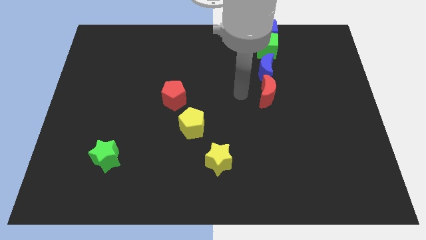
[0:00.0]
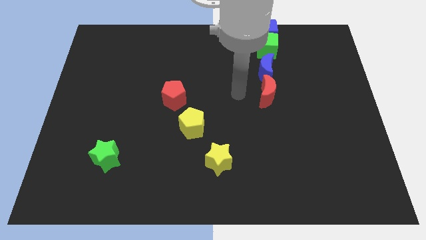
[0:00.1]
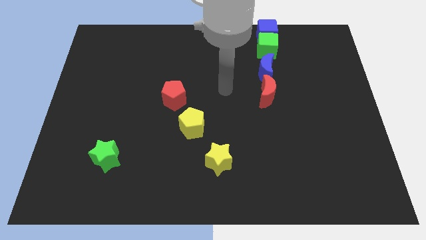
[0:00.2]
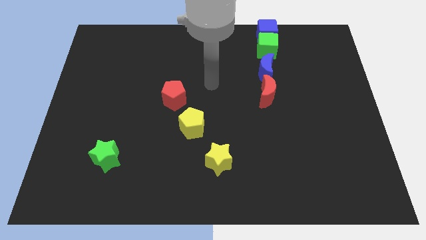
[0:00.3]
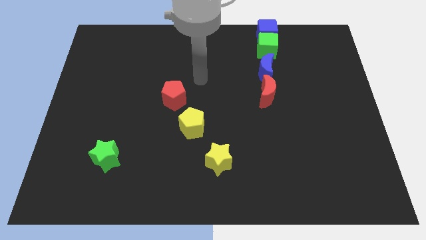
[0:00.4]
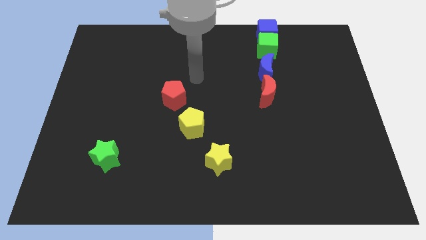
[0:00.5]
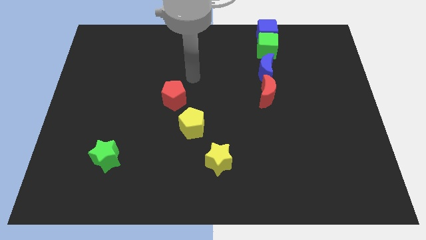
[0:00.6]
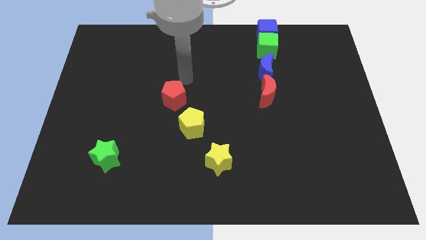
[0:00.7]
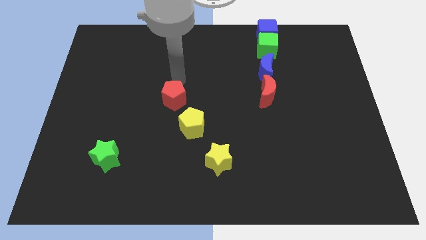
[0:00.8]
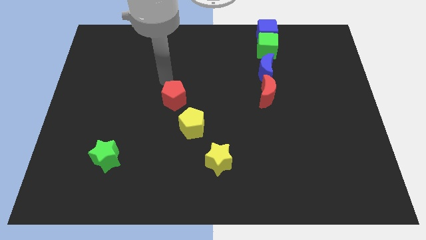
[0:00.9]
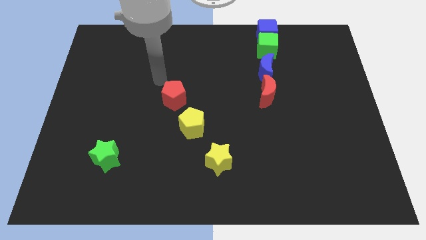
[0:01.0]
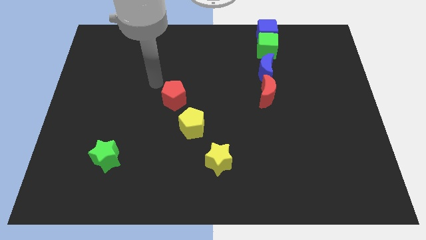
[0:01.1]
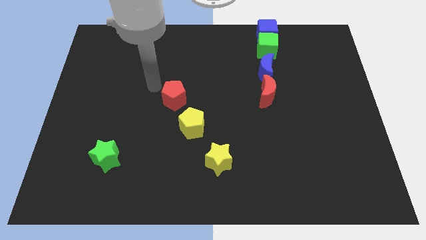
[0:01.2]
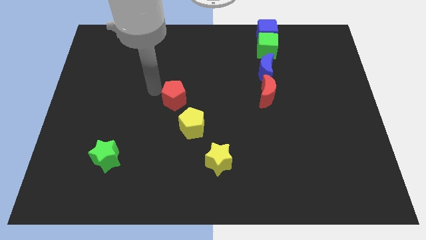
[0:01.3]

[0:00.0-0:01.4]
point the arm to the left of the red pentagon

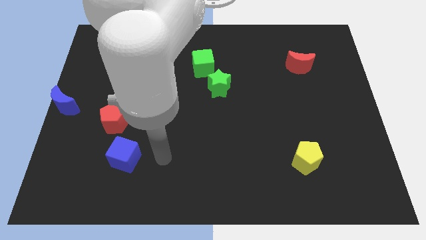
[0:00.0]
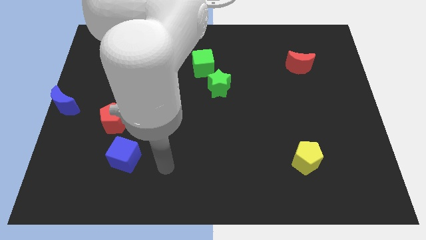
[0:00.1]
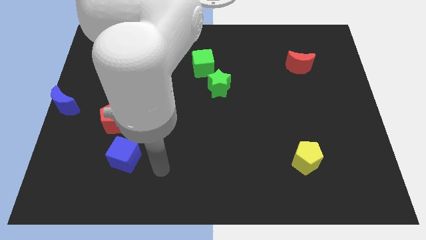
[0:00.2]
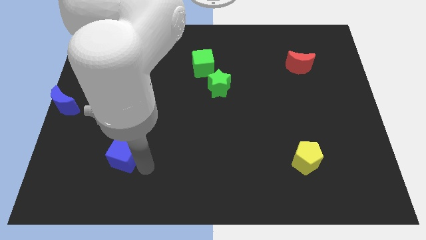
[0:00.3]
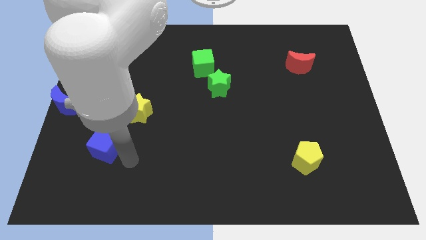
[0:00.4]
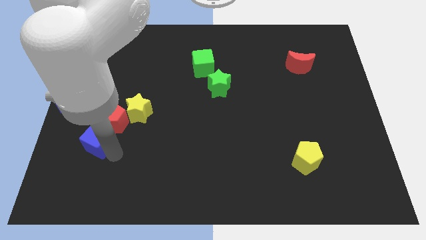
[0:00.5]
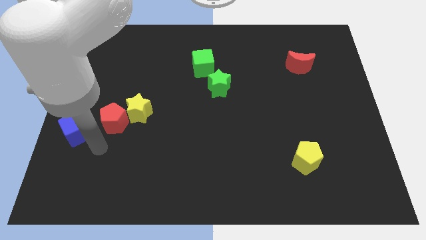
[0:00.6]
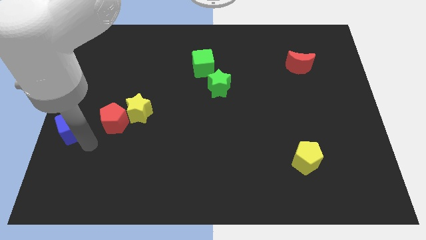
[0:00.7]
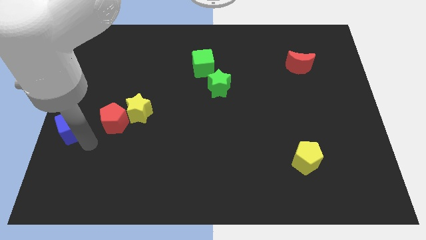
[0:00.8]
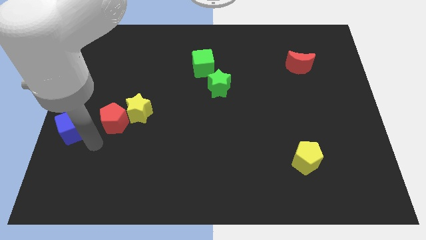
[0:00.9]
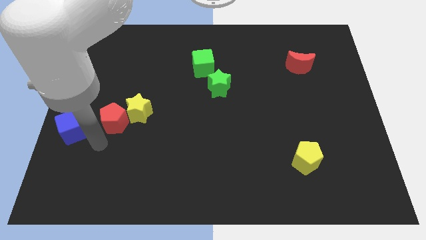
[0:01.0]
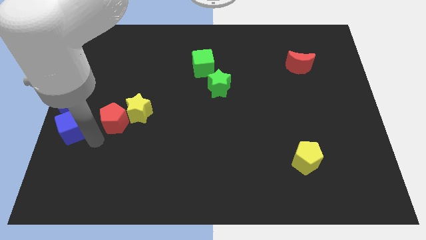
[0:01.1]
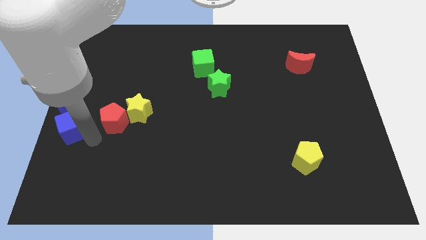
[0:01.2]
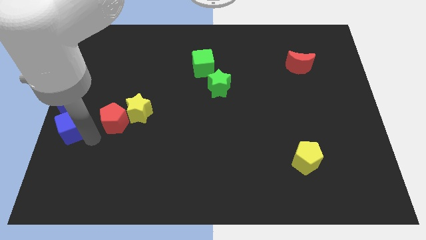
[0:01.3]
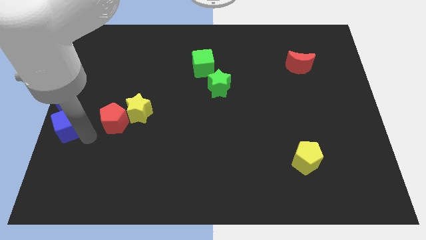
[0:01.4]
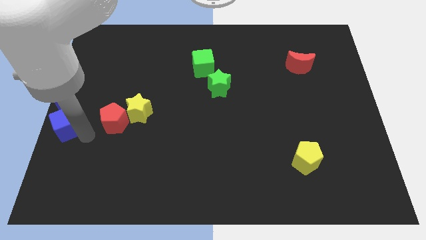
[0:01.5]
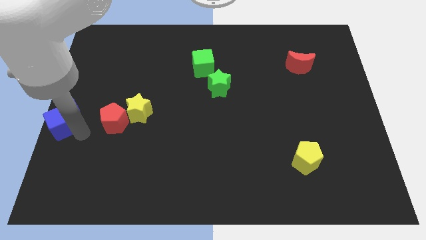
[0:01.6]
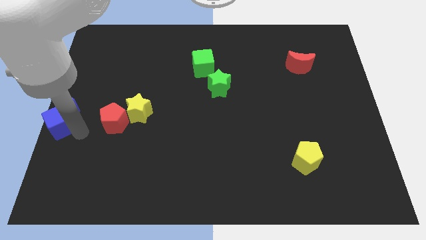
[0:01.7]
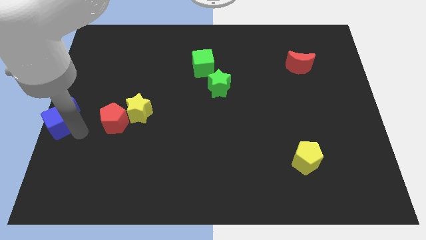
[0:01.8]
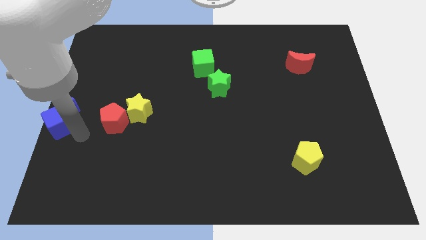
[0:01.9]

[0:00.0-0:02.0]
push the blue cube below to the blue moon

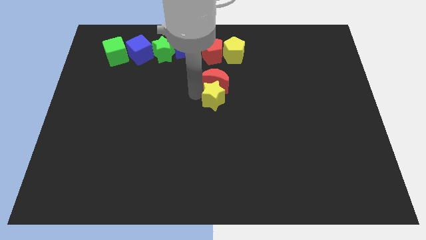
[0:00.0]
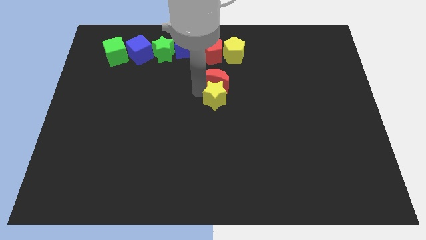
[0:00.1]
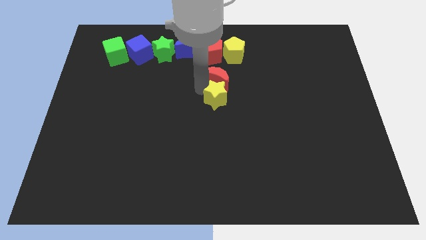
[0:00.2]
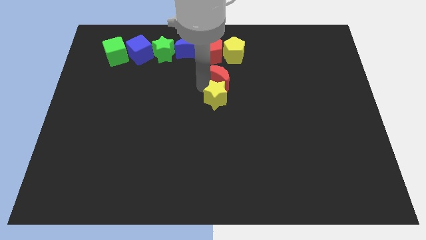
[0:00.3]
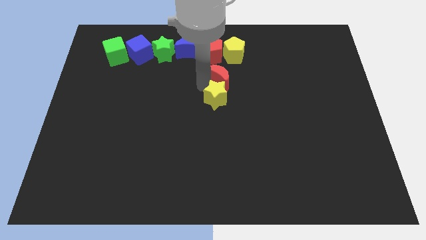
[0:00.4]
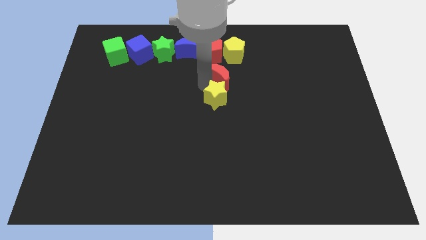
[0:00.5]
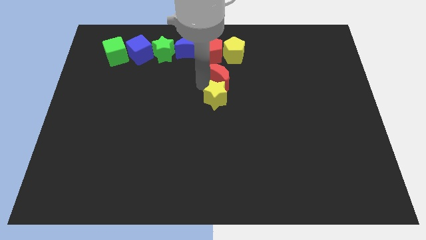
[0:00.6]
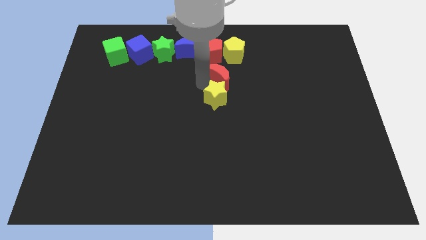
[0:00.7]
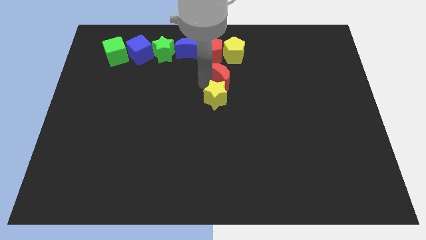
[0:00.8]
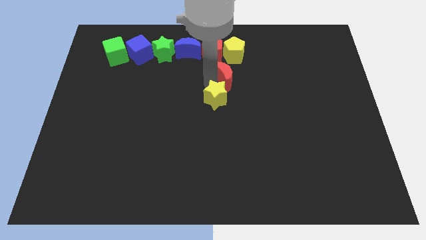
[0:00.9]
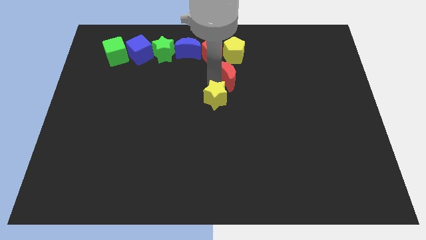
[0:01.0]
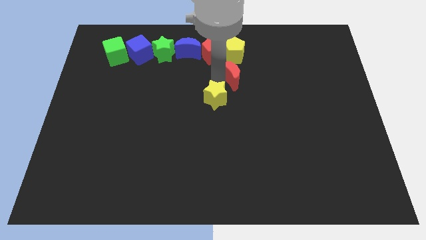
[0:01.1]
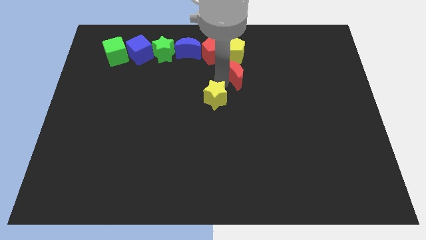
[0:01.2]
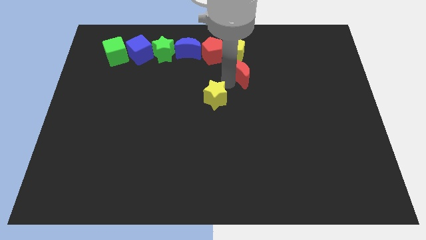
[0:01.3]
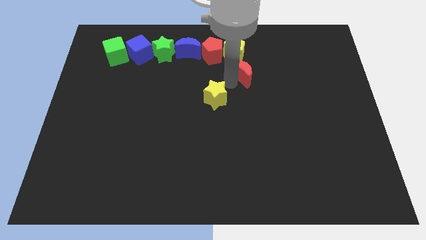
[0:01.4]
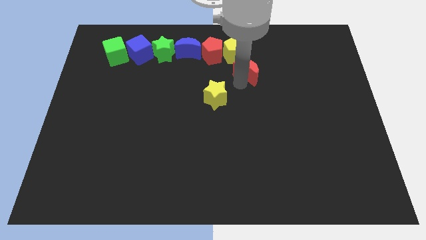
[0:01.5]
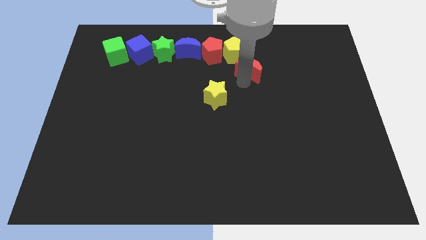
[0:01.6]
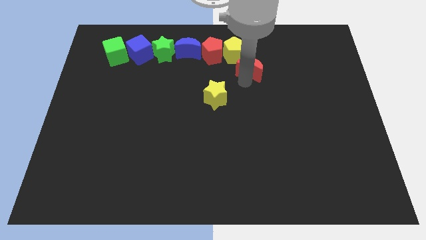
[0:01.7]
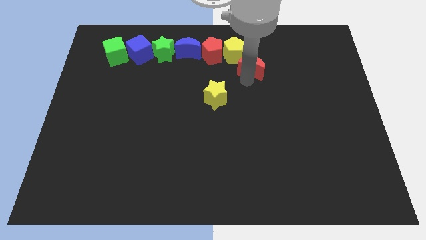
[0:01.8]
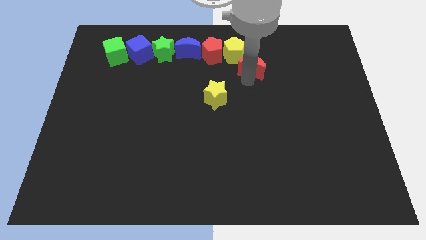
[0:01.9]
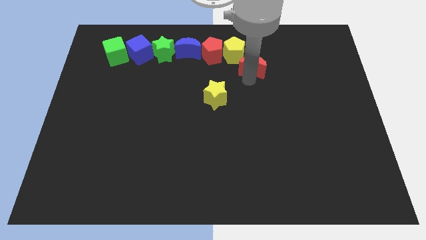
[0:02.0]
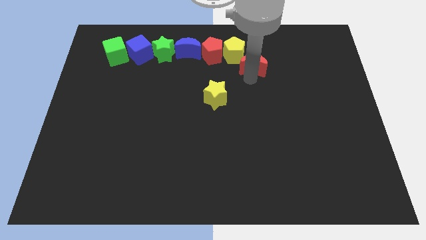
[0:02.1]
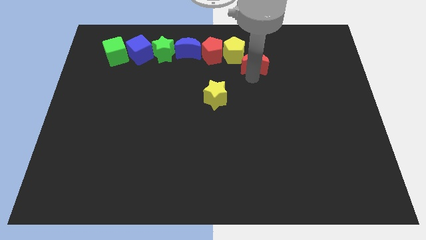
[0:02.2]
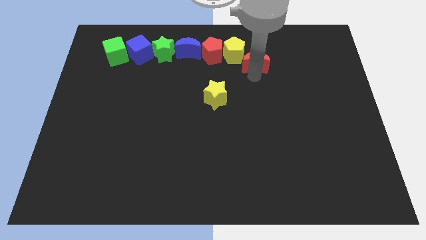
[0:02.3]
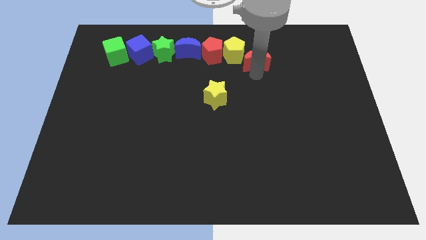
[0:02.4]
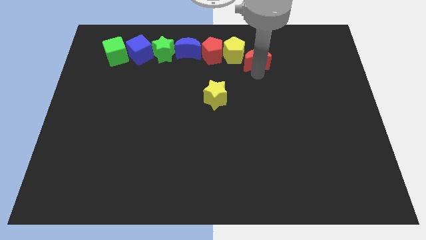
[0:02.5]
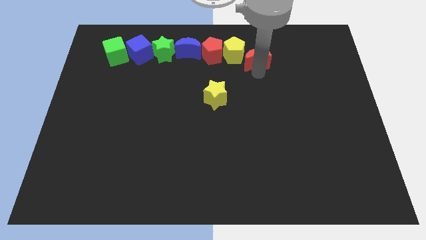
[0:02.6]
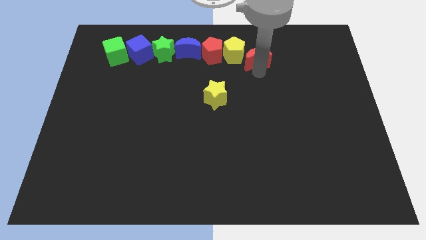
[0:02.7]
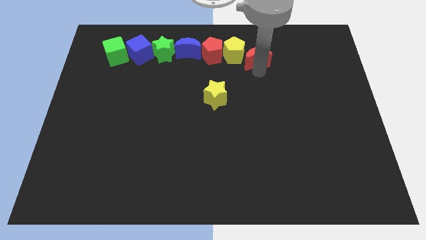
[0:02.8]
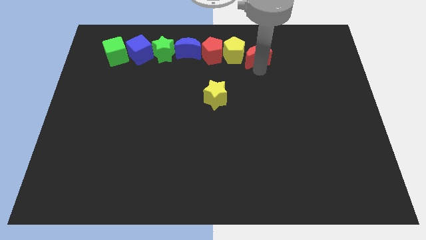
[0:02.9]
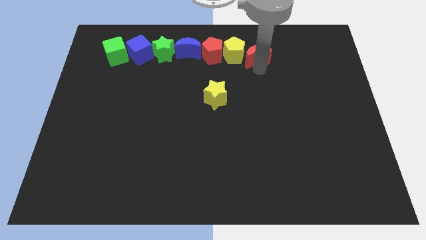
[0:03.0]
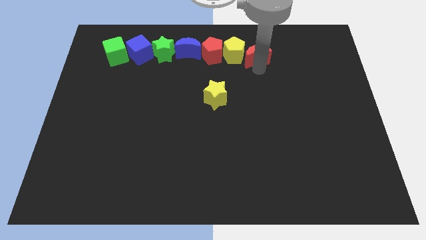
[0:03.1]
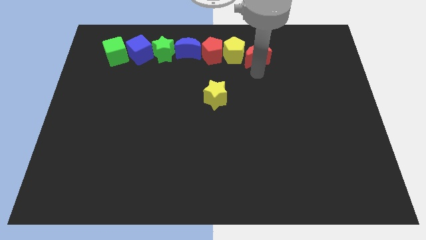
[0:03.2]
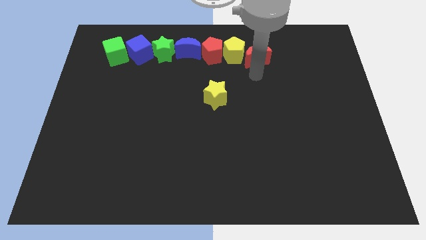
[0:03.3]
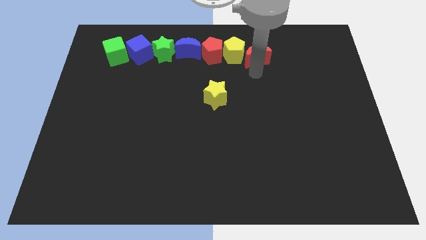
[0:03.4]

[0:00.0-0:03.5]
place red moon to the right of yellow pentagon

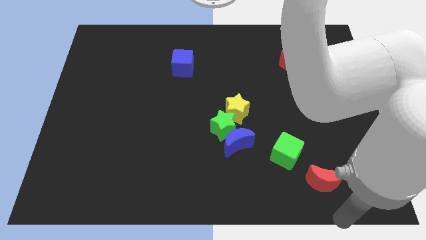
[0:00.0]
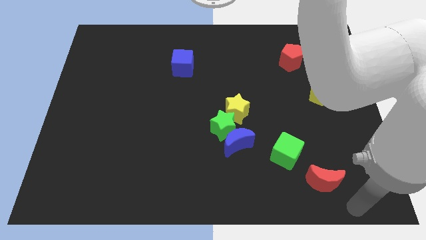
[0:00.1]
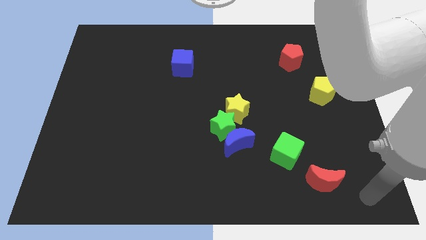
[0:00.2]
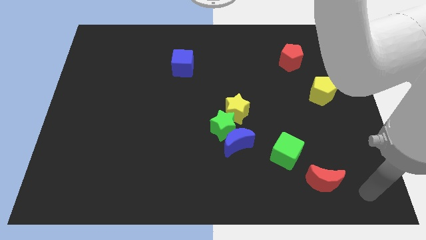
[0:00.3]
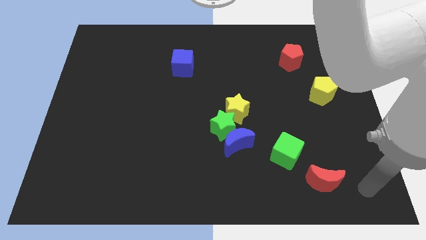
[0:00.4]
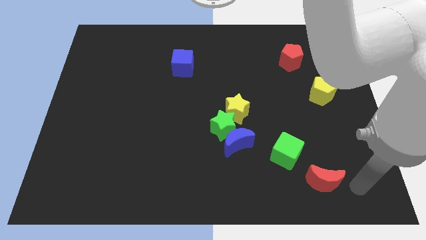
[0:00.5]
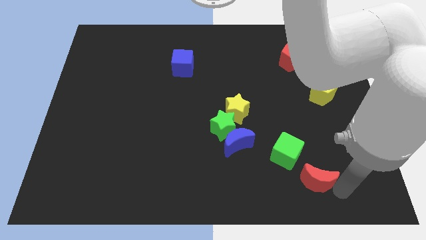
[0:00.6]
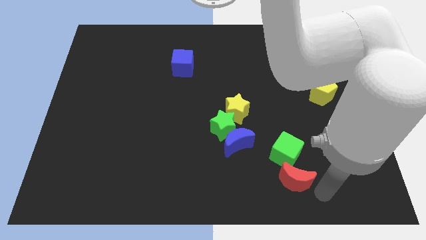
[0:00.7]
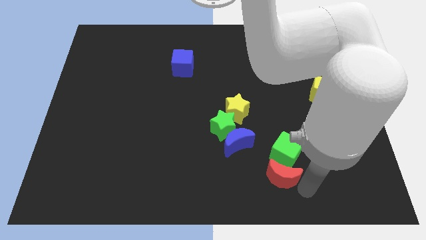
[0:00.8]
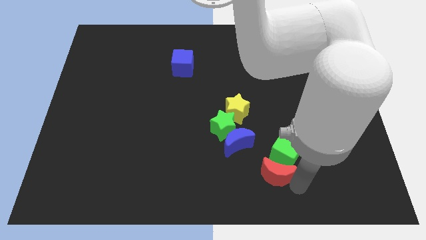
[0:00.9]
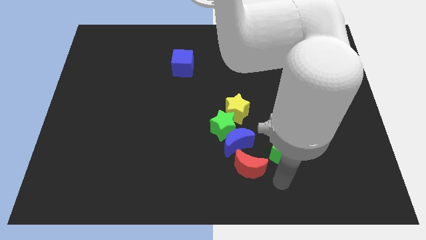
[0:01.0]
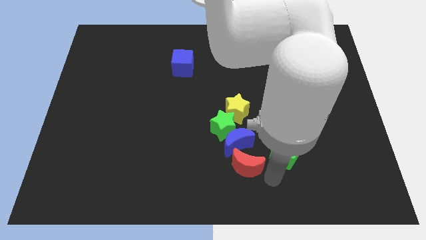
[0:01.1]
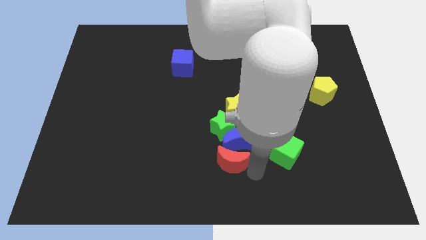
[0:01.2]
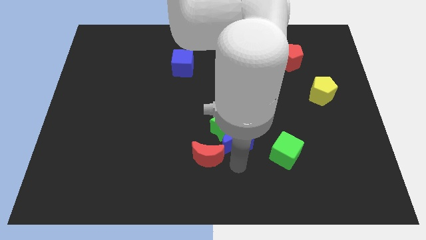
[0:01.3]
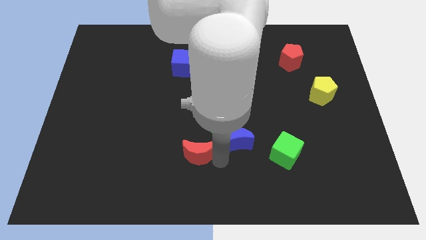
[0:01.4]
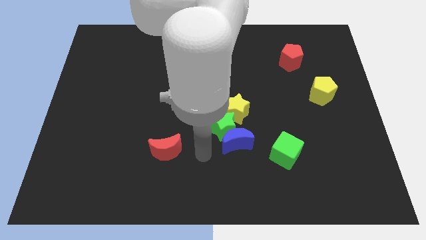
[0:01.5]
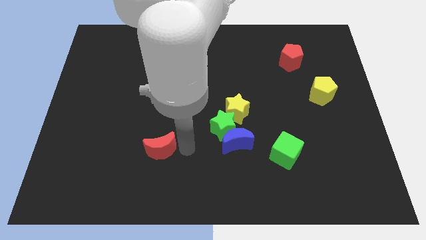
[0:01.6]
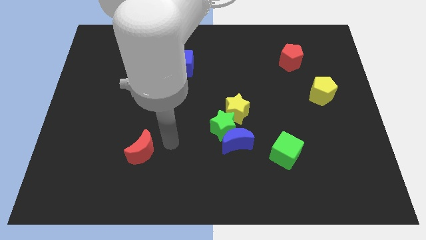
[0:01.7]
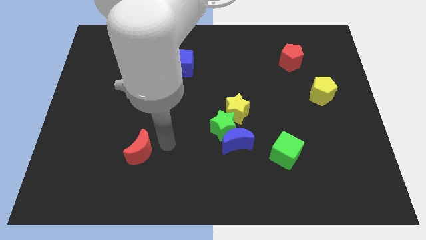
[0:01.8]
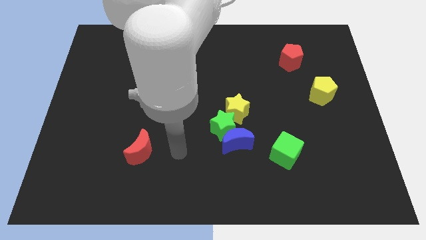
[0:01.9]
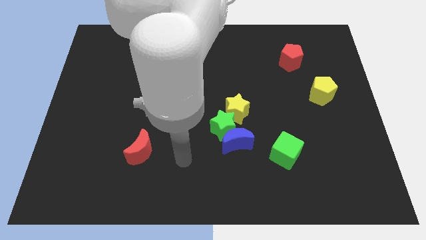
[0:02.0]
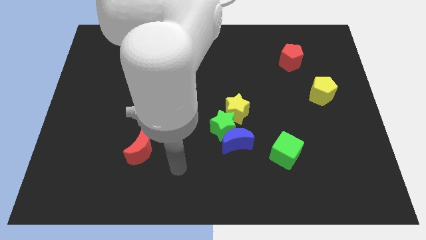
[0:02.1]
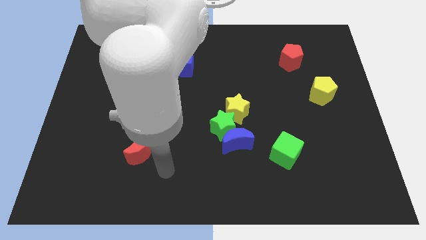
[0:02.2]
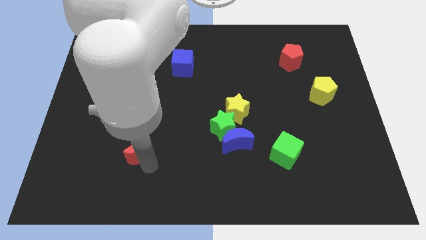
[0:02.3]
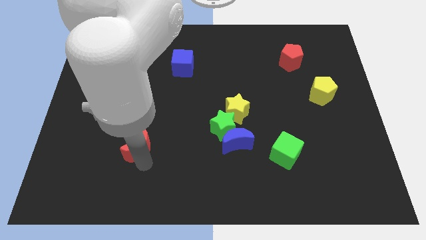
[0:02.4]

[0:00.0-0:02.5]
move the red moon diagonal below the blue cube
